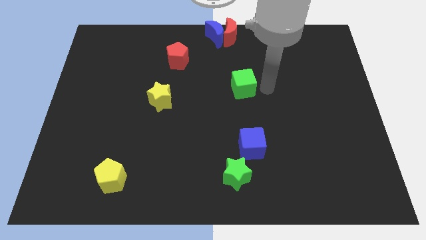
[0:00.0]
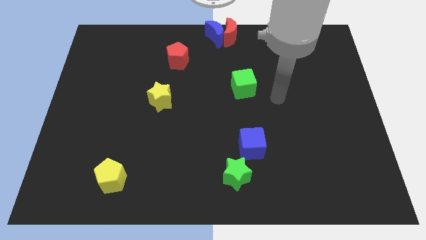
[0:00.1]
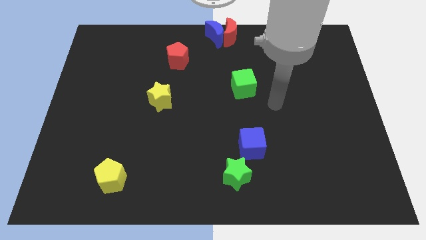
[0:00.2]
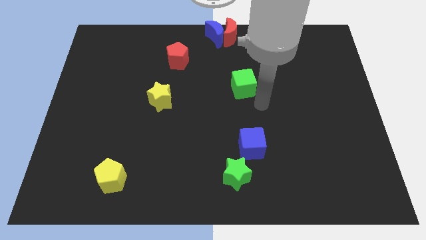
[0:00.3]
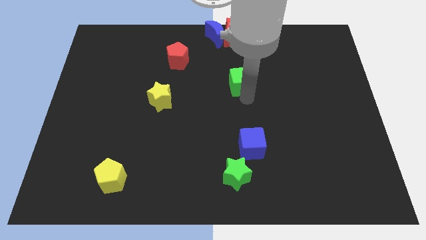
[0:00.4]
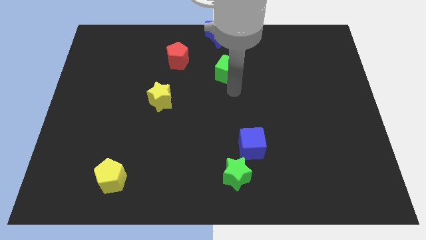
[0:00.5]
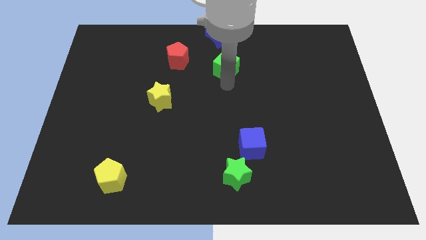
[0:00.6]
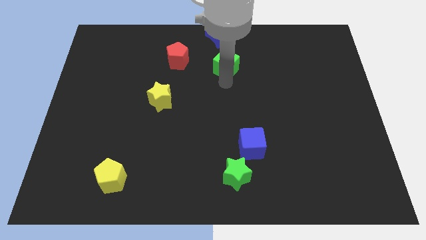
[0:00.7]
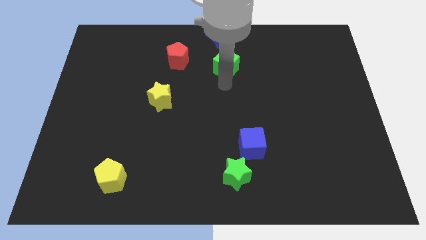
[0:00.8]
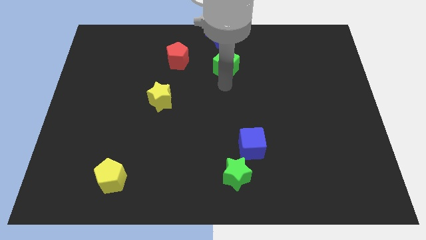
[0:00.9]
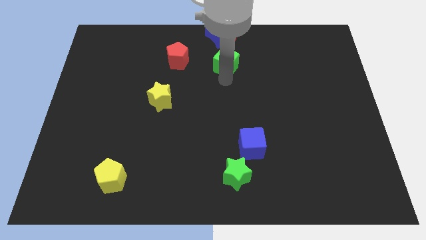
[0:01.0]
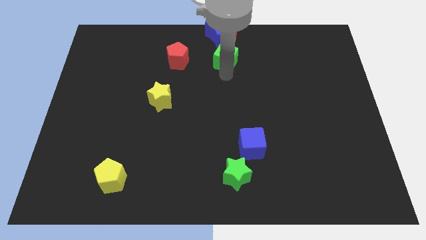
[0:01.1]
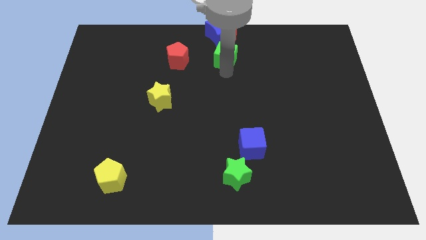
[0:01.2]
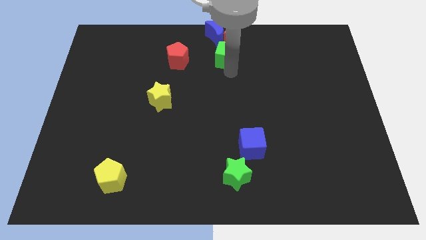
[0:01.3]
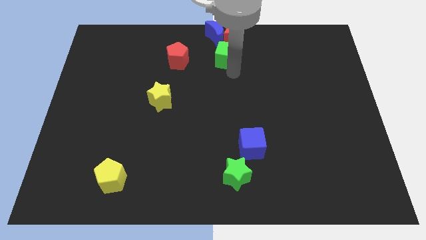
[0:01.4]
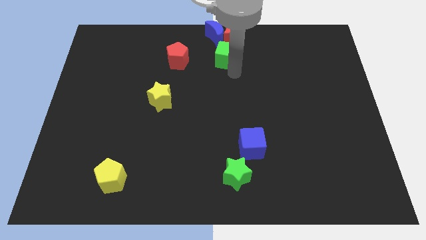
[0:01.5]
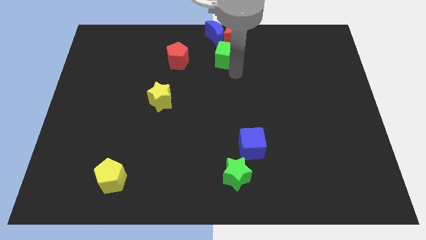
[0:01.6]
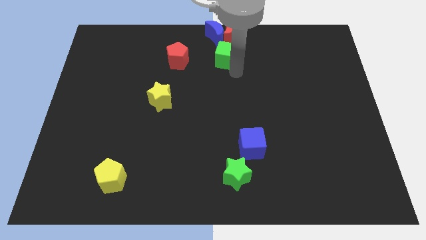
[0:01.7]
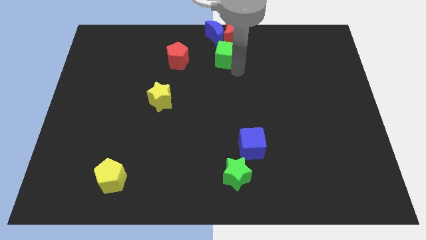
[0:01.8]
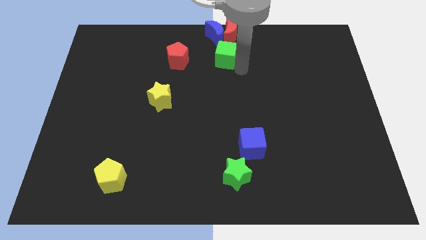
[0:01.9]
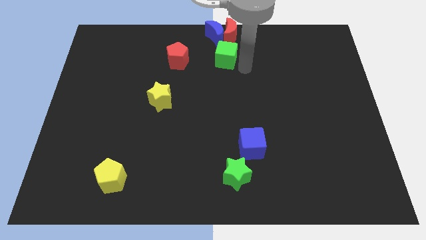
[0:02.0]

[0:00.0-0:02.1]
place the green cube underneath the red moon

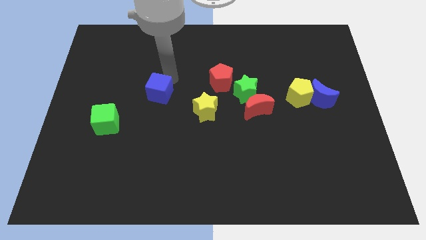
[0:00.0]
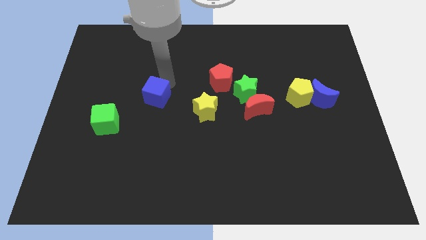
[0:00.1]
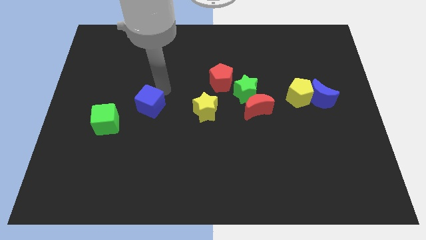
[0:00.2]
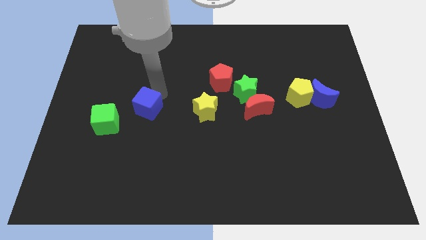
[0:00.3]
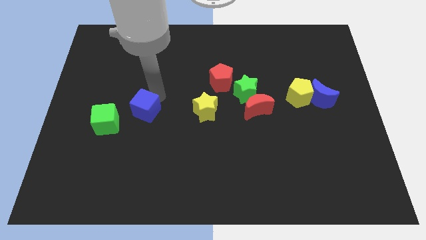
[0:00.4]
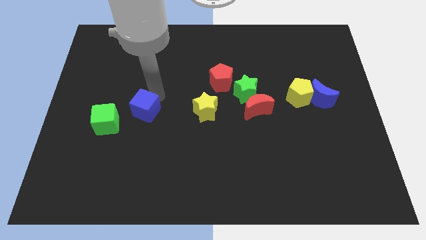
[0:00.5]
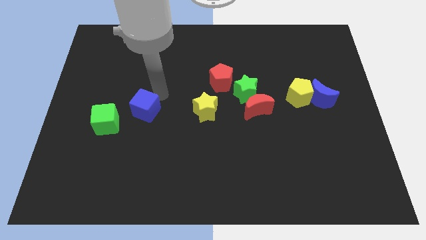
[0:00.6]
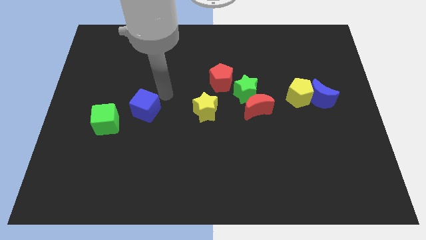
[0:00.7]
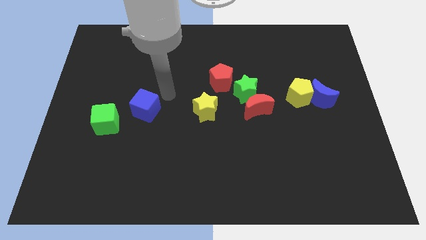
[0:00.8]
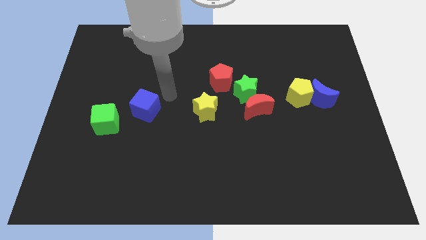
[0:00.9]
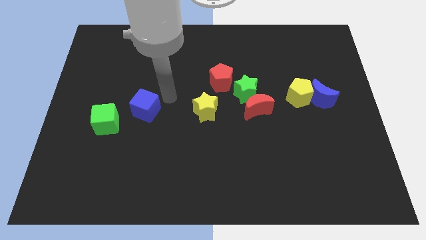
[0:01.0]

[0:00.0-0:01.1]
push the blue cube to the top right of the green cube

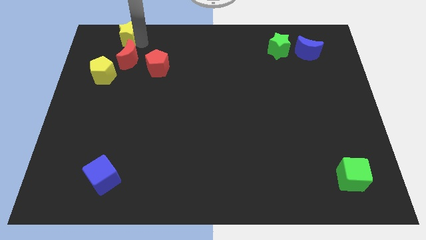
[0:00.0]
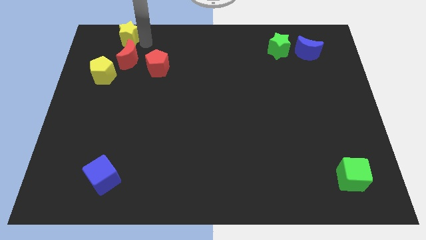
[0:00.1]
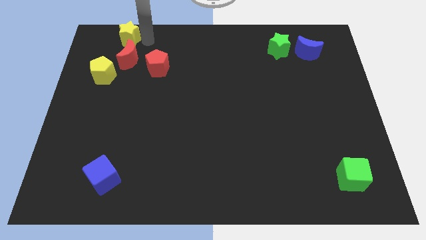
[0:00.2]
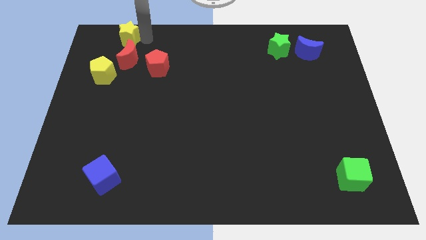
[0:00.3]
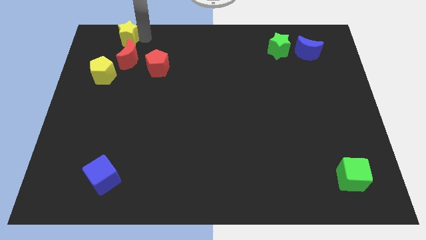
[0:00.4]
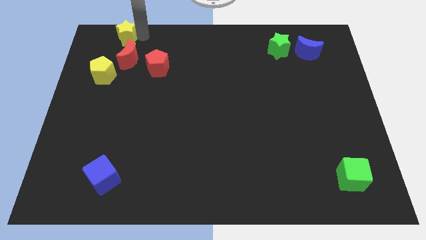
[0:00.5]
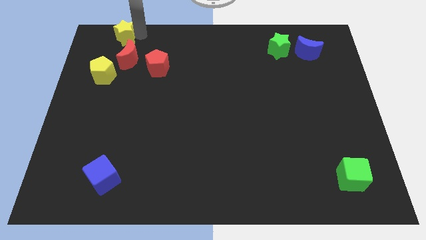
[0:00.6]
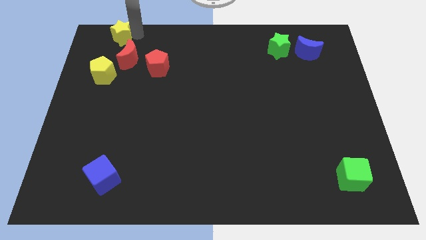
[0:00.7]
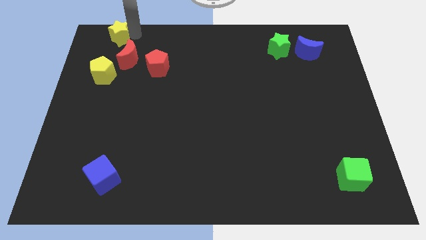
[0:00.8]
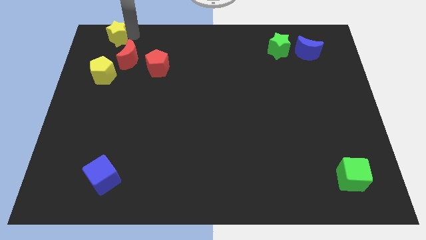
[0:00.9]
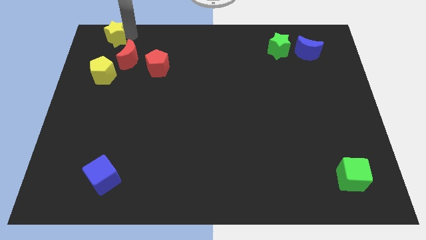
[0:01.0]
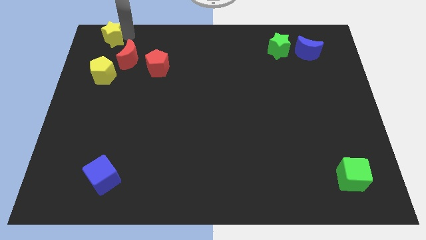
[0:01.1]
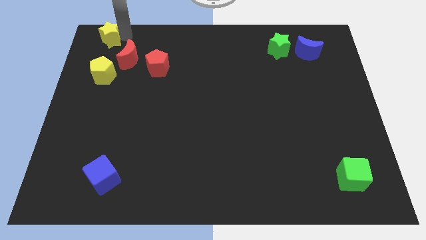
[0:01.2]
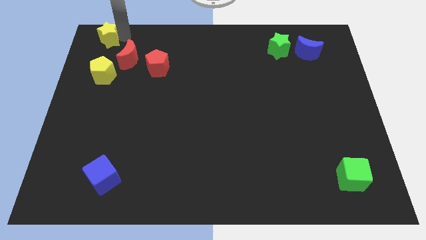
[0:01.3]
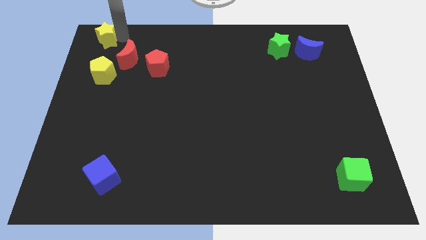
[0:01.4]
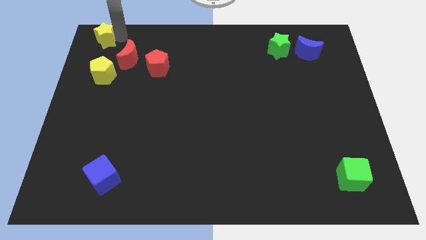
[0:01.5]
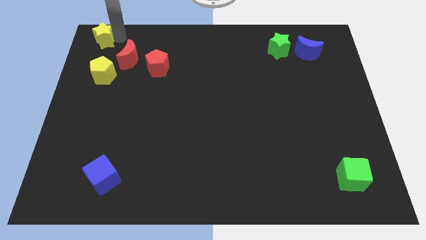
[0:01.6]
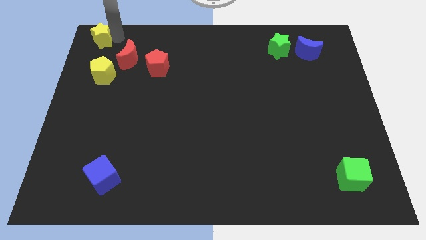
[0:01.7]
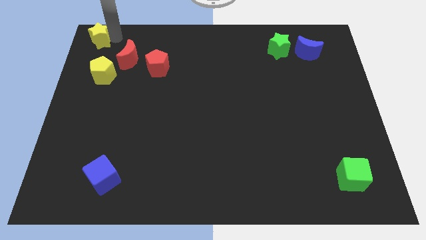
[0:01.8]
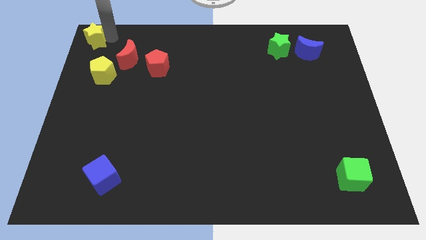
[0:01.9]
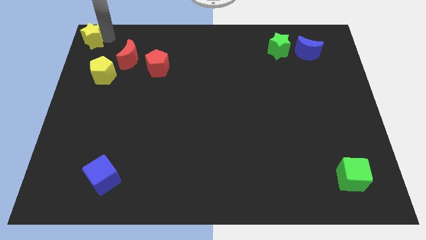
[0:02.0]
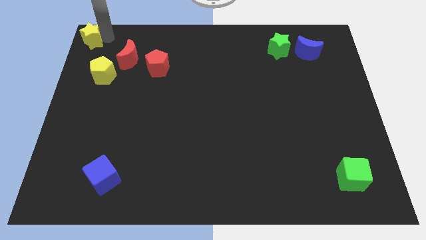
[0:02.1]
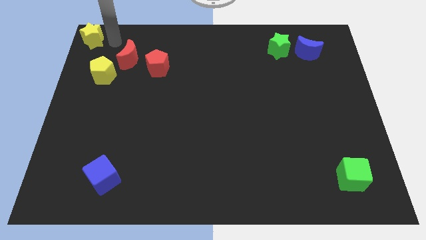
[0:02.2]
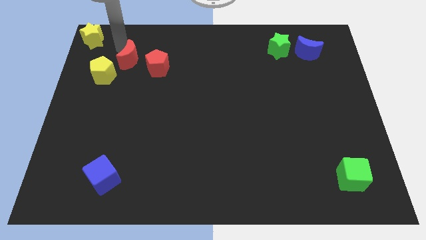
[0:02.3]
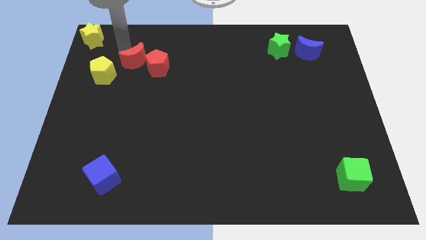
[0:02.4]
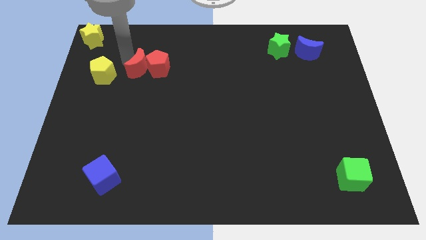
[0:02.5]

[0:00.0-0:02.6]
push the yellow star to top left side of the board

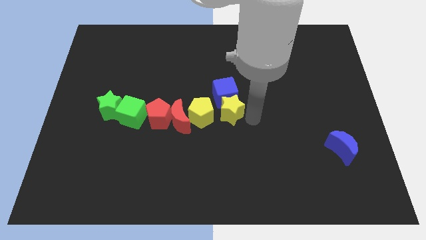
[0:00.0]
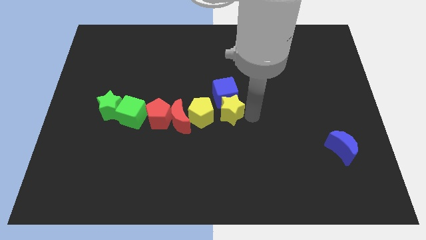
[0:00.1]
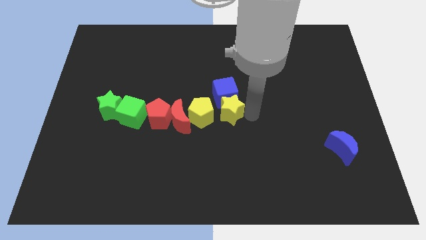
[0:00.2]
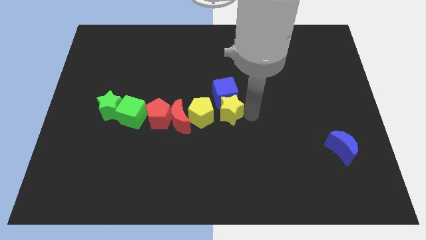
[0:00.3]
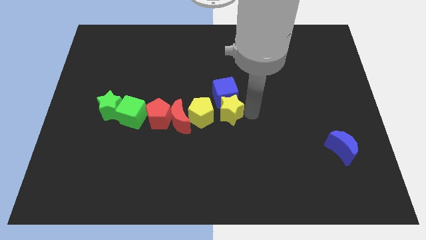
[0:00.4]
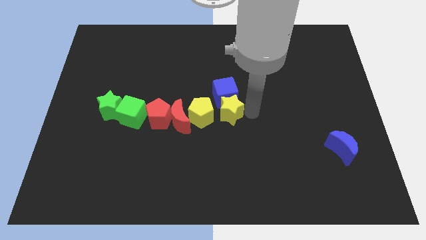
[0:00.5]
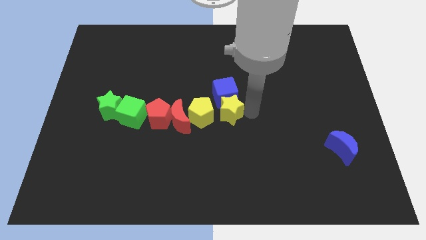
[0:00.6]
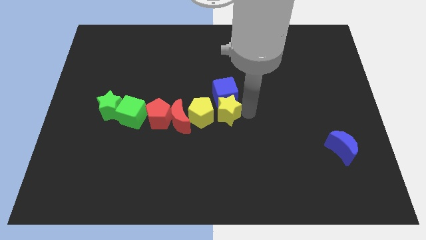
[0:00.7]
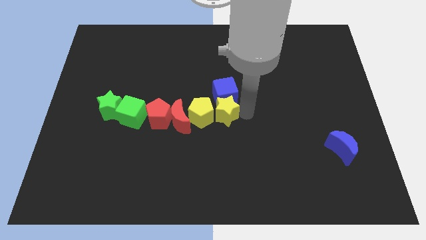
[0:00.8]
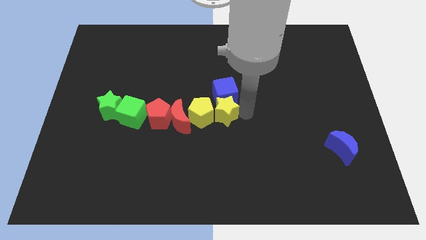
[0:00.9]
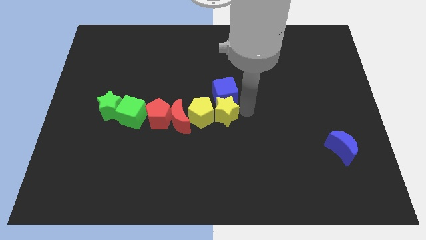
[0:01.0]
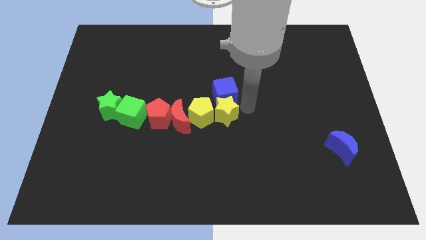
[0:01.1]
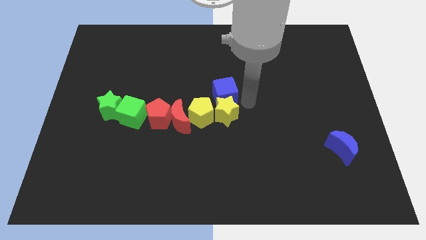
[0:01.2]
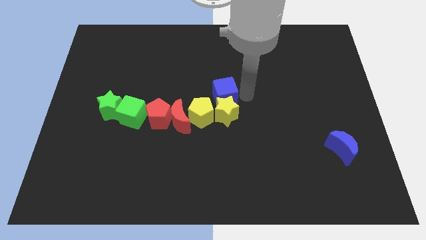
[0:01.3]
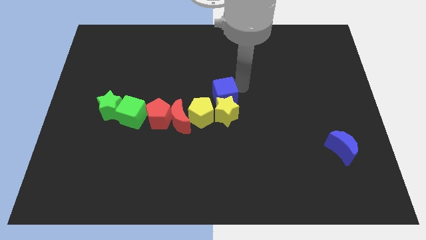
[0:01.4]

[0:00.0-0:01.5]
push the yellow star into the yellow pentagon

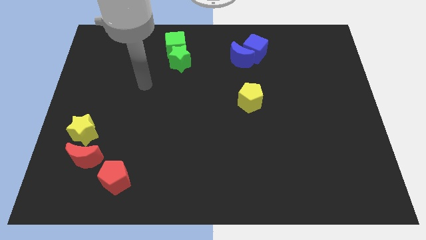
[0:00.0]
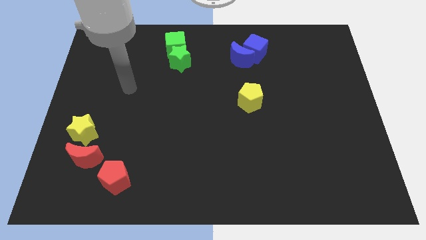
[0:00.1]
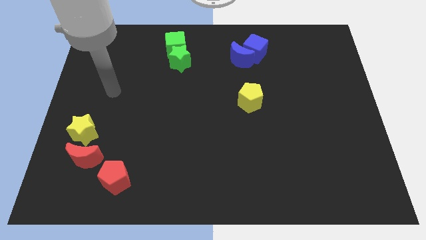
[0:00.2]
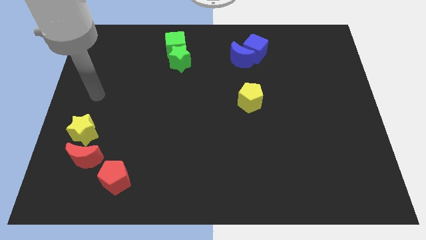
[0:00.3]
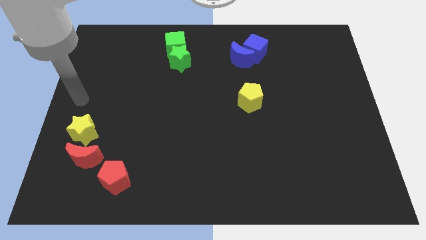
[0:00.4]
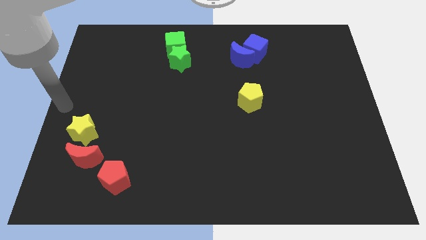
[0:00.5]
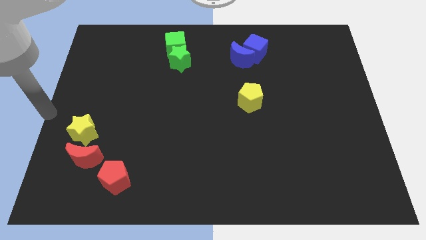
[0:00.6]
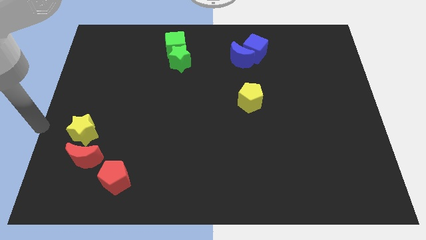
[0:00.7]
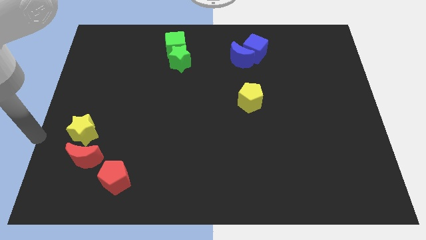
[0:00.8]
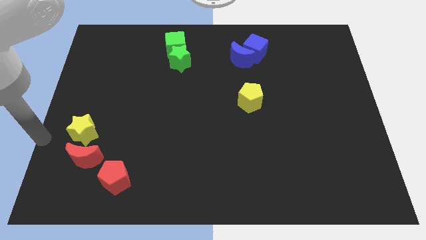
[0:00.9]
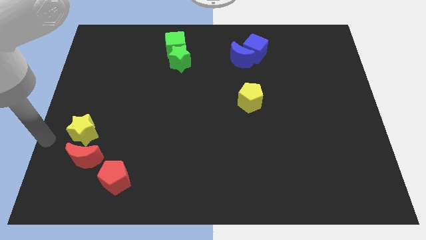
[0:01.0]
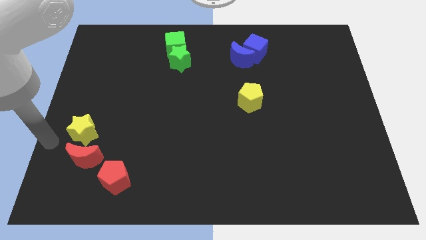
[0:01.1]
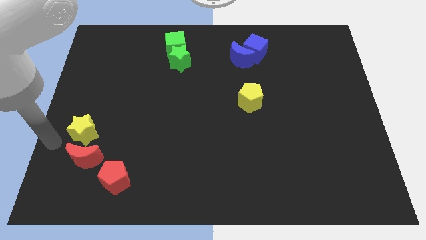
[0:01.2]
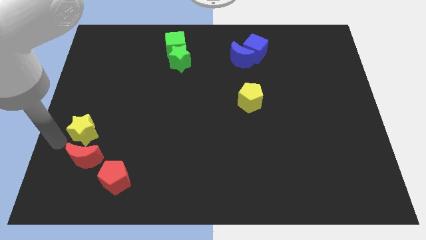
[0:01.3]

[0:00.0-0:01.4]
place your arm to the left of yellow star

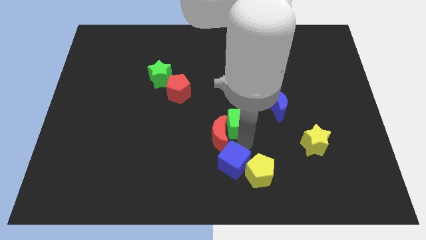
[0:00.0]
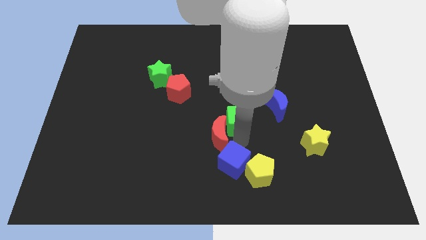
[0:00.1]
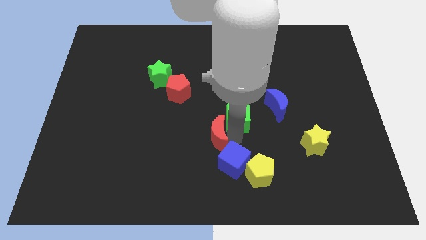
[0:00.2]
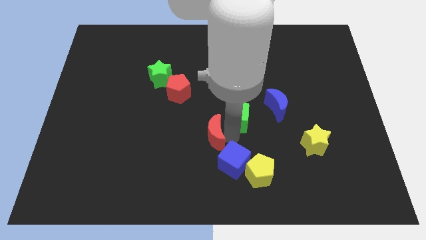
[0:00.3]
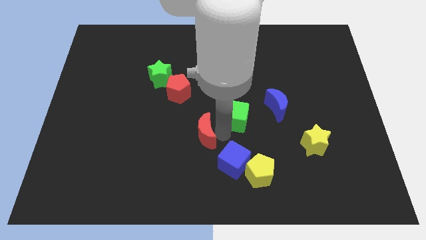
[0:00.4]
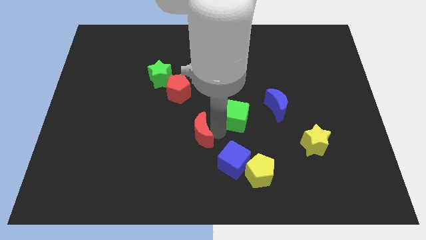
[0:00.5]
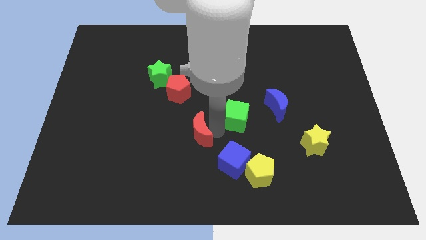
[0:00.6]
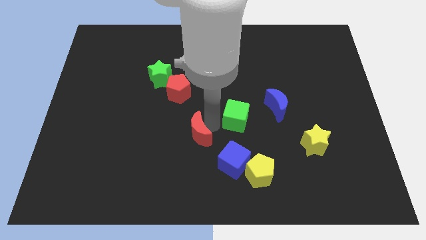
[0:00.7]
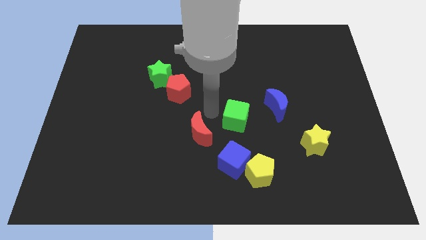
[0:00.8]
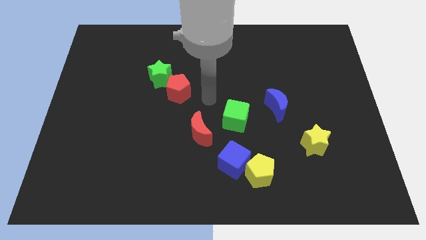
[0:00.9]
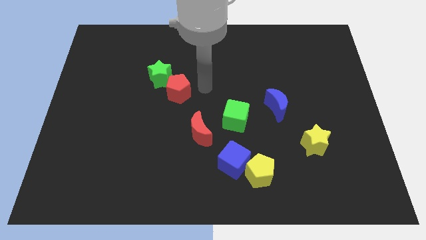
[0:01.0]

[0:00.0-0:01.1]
separate the red crescent and green cube
